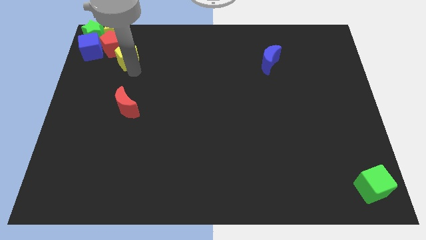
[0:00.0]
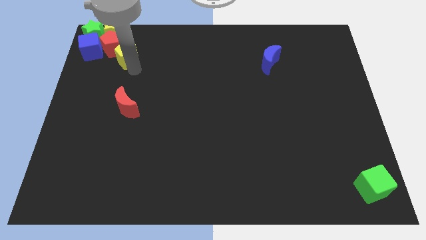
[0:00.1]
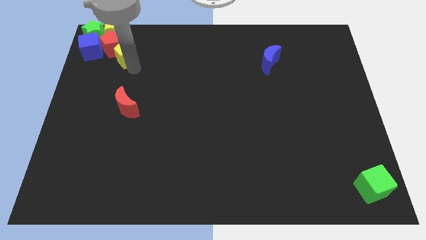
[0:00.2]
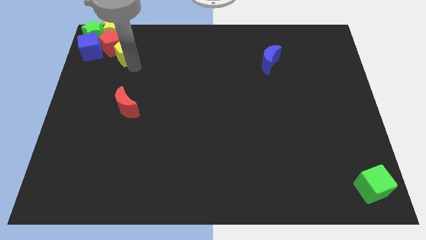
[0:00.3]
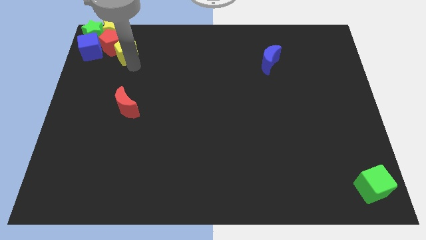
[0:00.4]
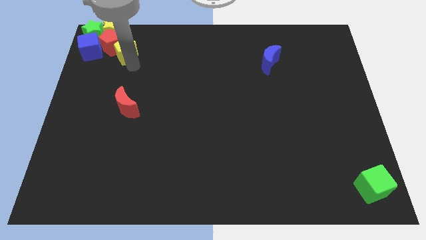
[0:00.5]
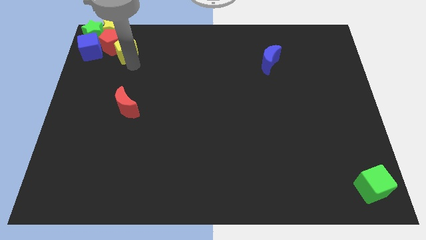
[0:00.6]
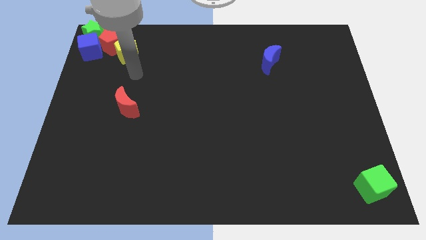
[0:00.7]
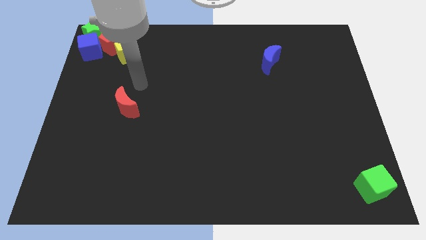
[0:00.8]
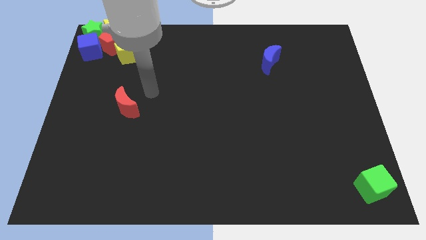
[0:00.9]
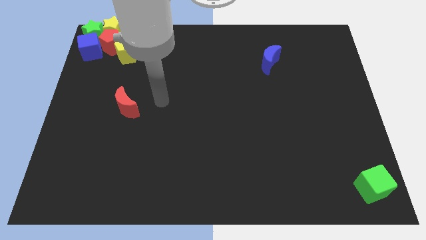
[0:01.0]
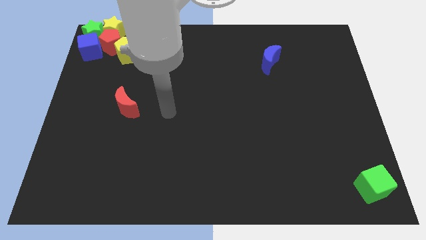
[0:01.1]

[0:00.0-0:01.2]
move the arm away from the yellow pentagon

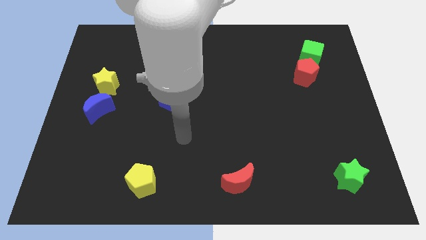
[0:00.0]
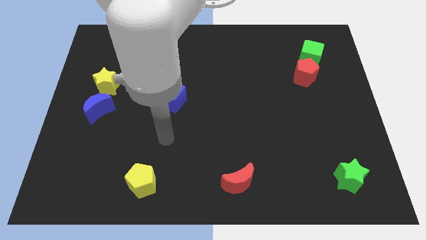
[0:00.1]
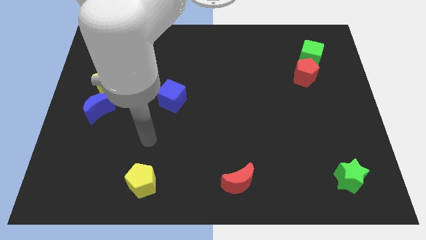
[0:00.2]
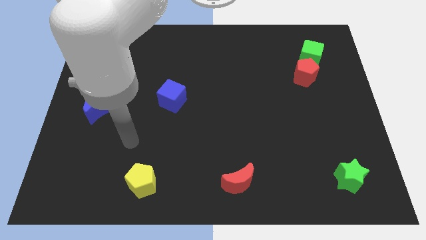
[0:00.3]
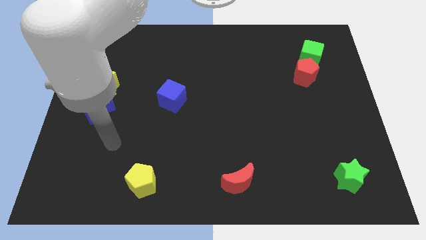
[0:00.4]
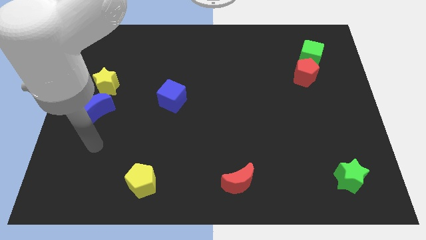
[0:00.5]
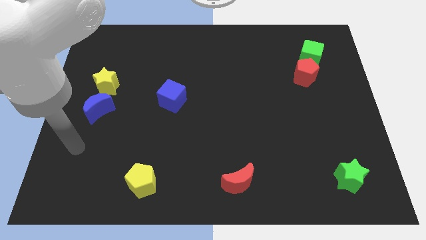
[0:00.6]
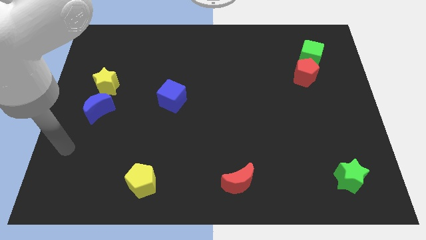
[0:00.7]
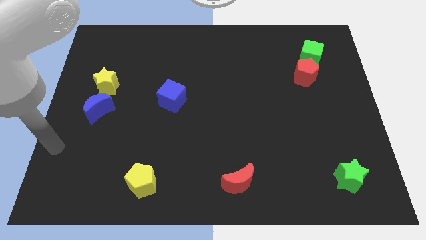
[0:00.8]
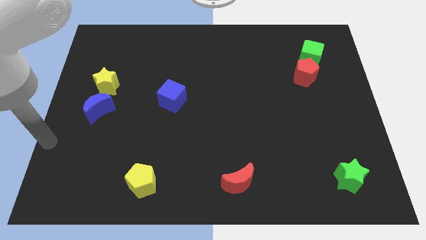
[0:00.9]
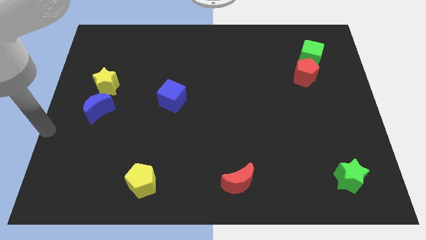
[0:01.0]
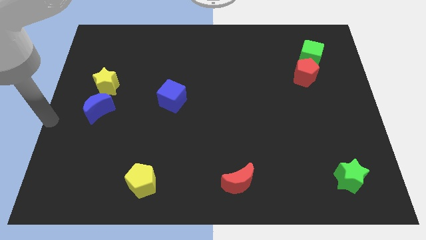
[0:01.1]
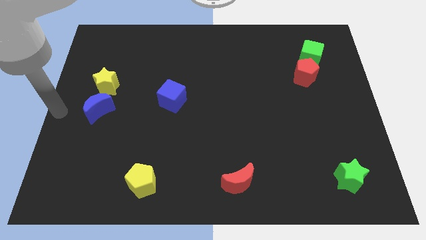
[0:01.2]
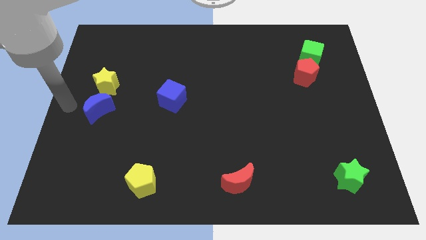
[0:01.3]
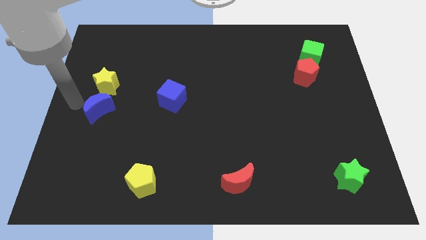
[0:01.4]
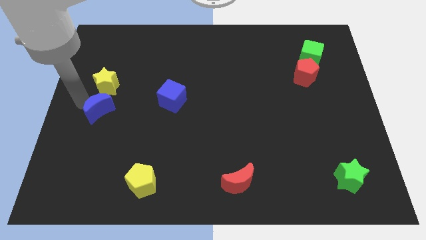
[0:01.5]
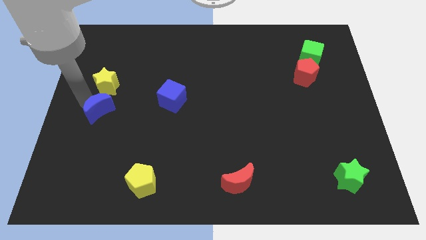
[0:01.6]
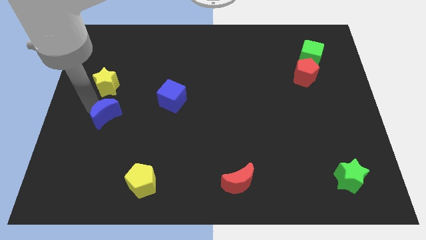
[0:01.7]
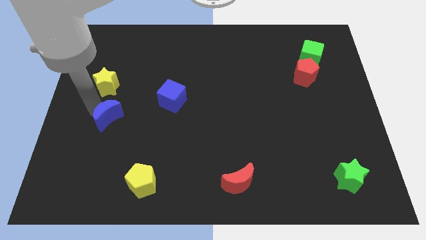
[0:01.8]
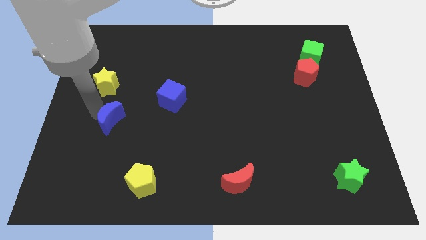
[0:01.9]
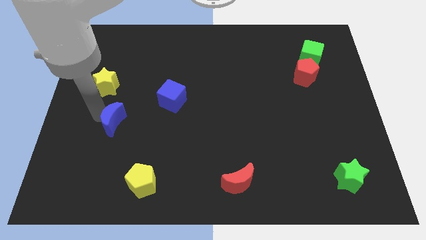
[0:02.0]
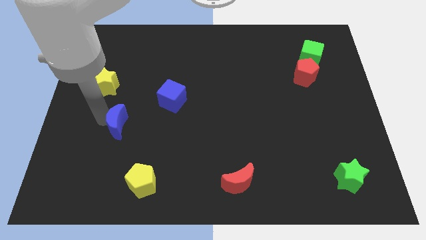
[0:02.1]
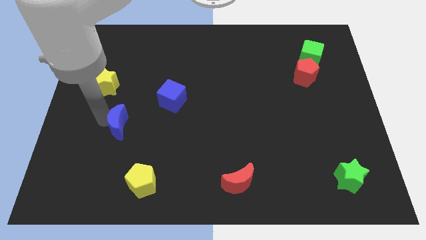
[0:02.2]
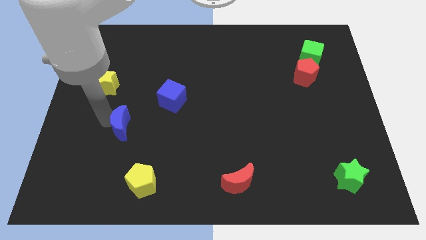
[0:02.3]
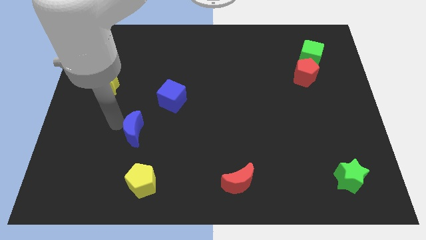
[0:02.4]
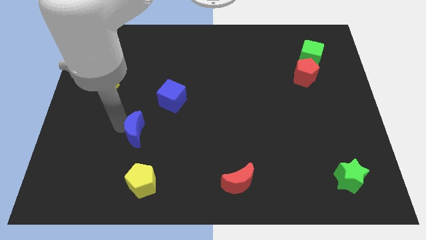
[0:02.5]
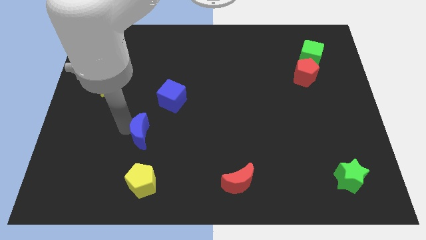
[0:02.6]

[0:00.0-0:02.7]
separate blue moon from yellow star

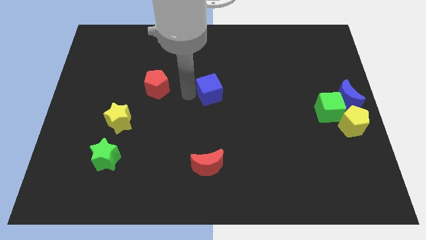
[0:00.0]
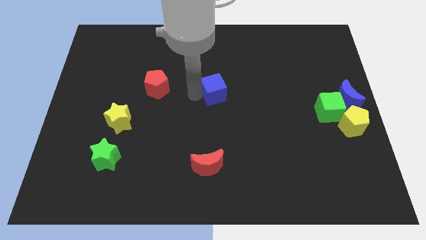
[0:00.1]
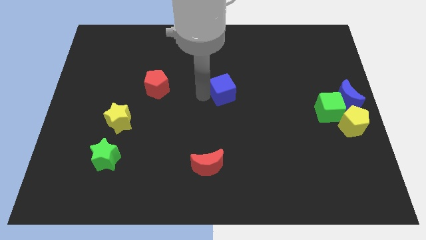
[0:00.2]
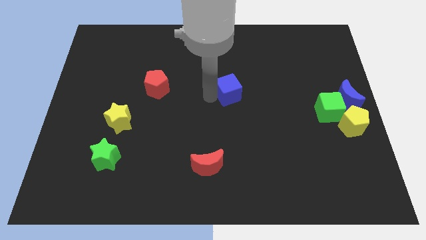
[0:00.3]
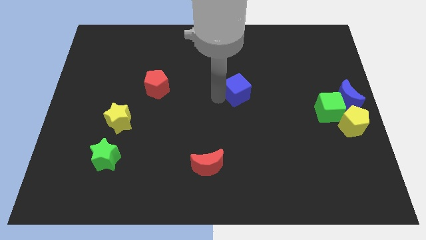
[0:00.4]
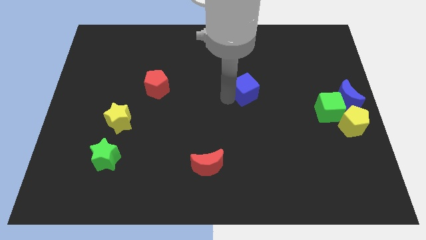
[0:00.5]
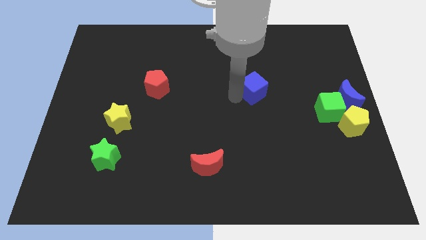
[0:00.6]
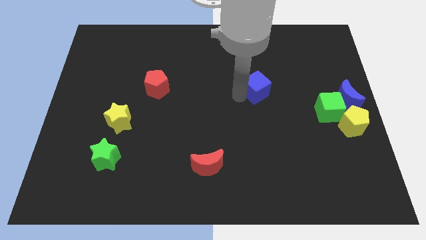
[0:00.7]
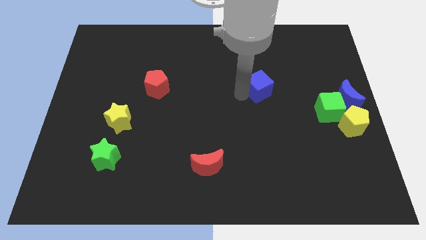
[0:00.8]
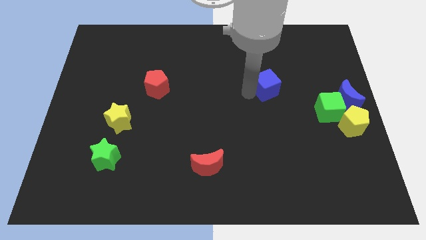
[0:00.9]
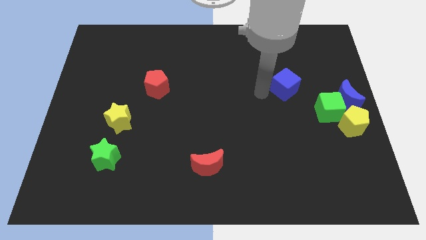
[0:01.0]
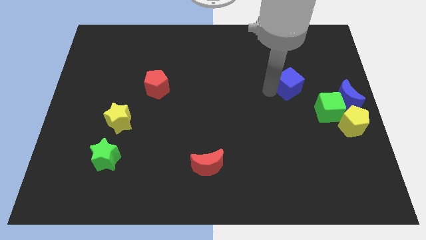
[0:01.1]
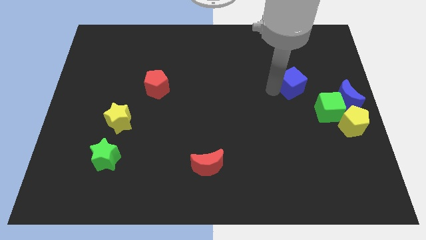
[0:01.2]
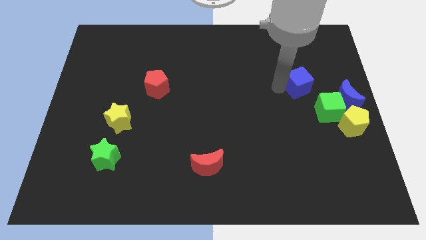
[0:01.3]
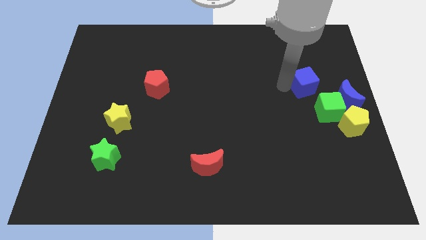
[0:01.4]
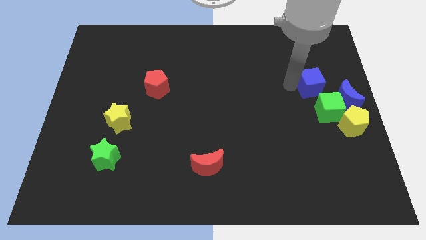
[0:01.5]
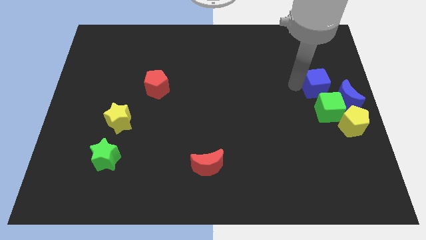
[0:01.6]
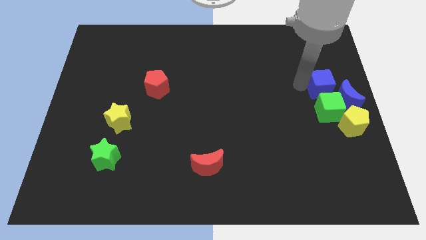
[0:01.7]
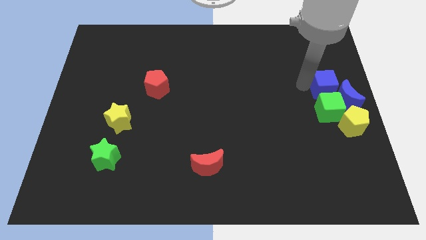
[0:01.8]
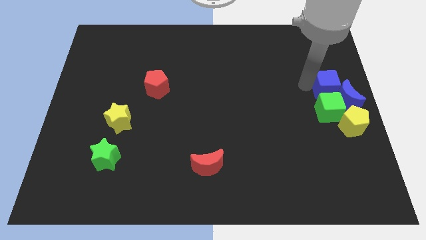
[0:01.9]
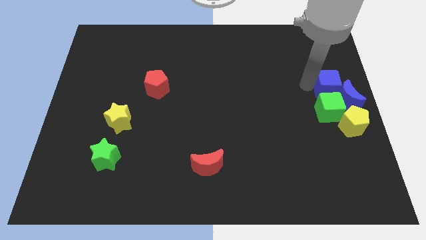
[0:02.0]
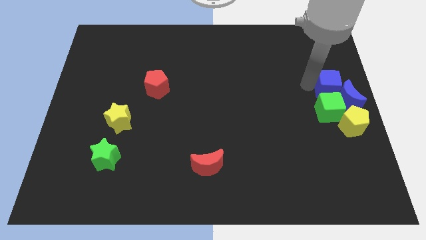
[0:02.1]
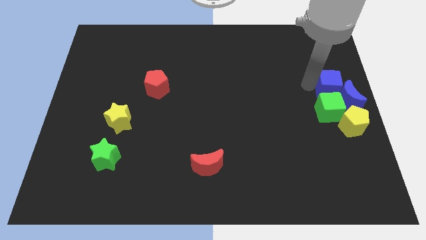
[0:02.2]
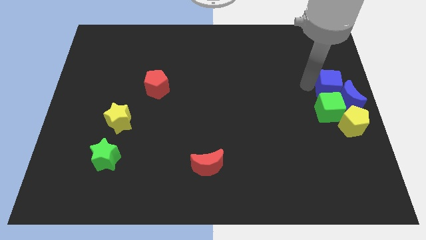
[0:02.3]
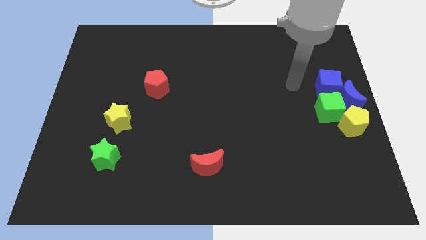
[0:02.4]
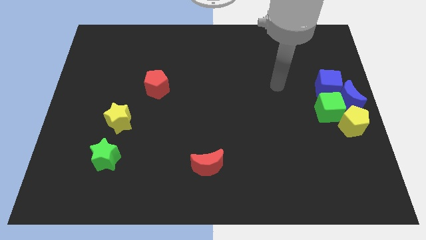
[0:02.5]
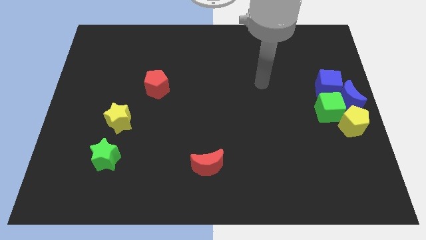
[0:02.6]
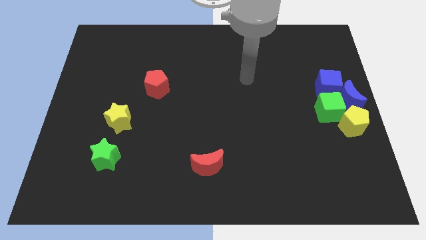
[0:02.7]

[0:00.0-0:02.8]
place the blue cube above the green cube

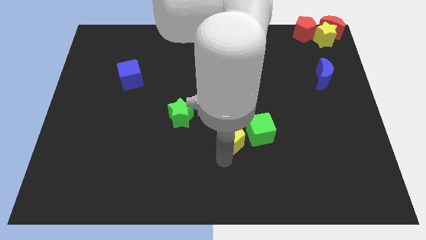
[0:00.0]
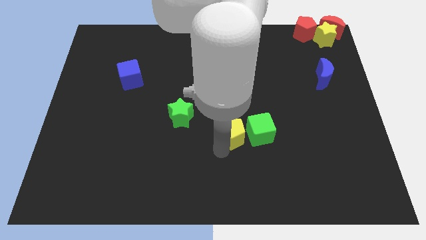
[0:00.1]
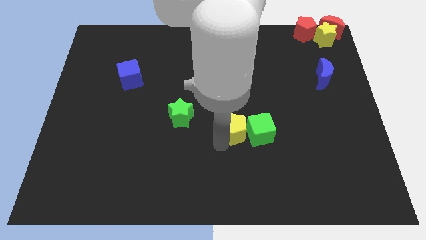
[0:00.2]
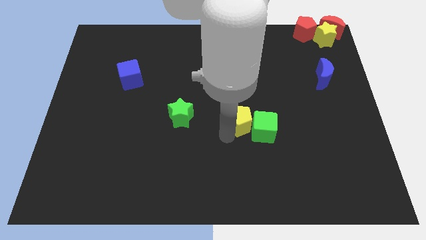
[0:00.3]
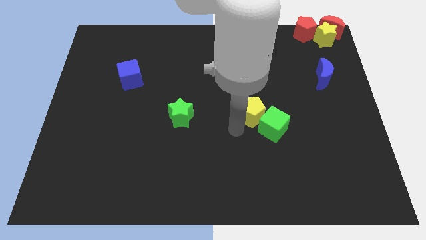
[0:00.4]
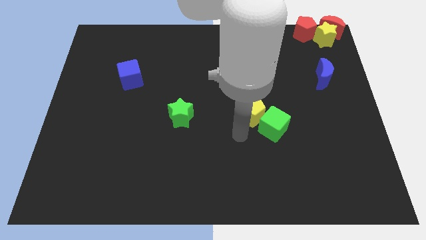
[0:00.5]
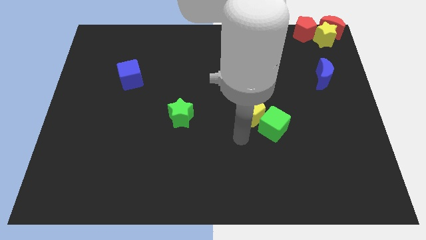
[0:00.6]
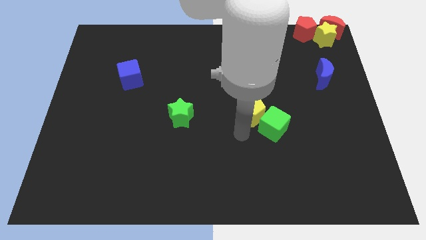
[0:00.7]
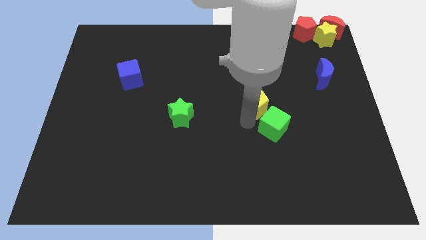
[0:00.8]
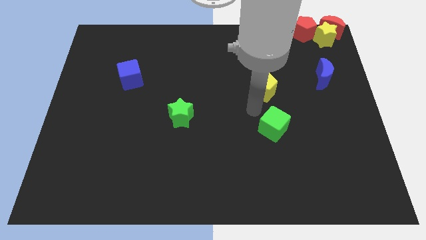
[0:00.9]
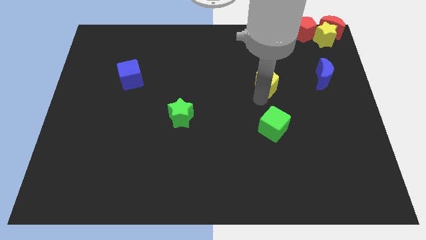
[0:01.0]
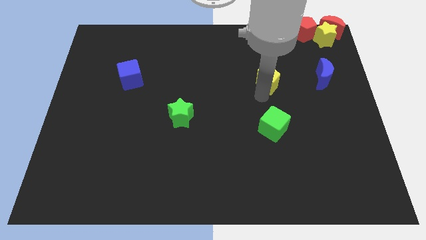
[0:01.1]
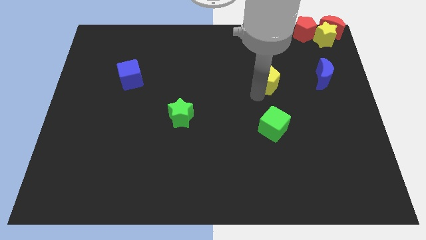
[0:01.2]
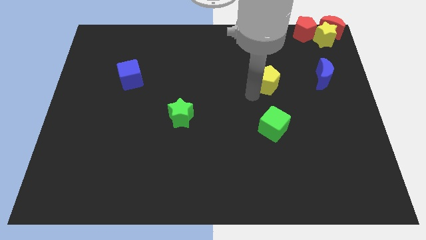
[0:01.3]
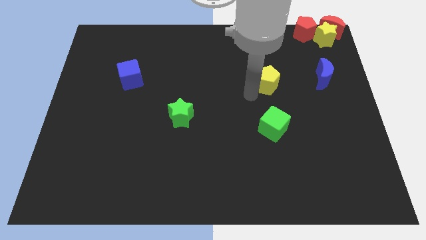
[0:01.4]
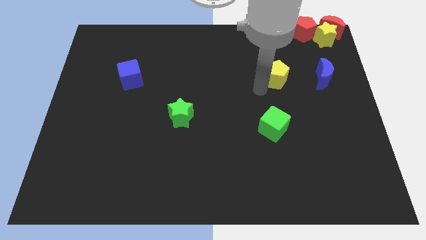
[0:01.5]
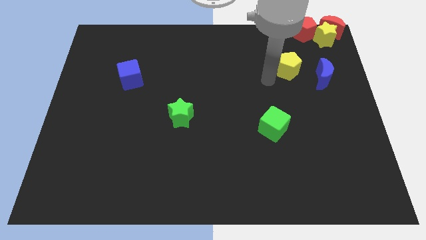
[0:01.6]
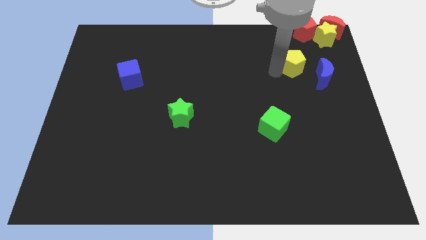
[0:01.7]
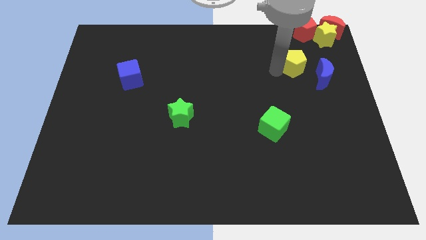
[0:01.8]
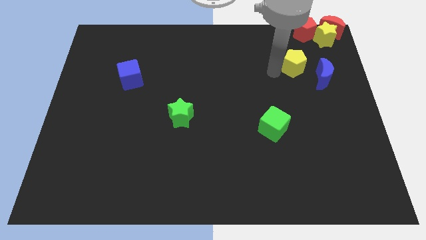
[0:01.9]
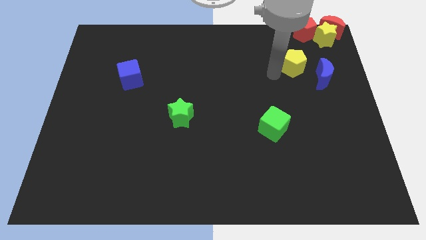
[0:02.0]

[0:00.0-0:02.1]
separate yellow pentagon from green cube

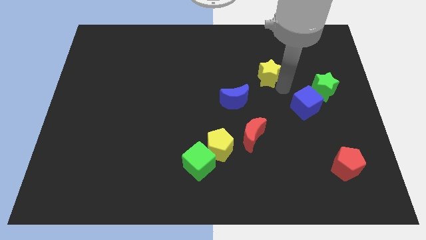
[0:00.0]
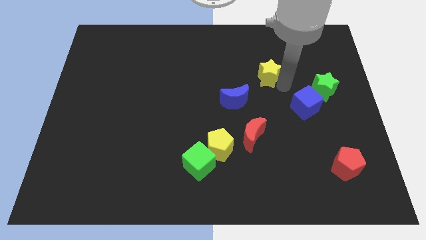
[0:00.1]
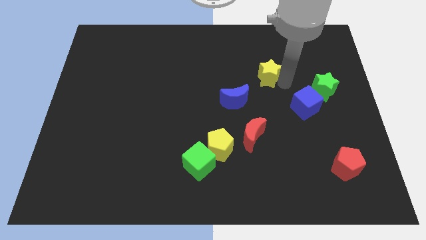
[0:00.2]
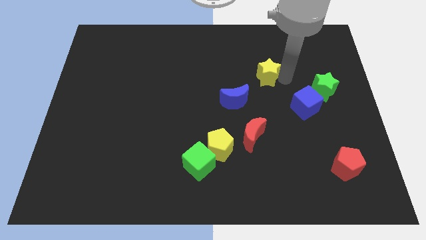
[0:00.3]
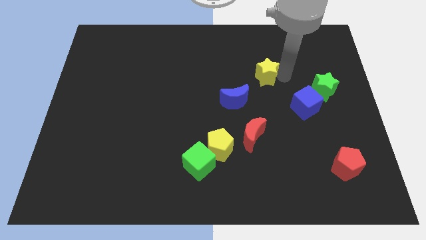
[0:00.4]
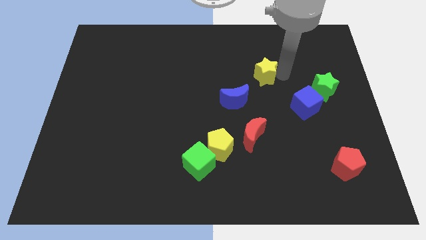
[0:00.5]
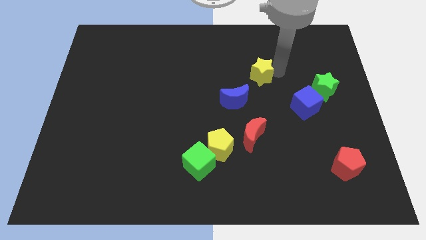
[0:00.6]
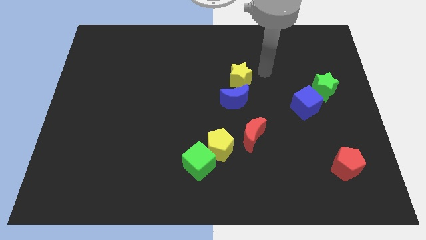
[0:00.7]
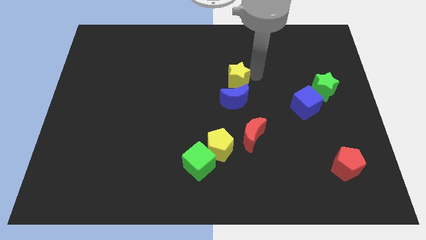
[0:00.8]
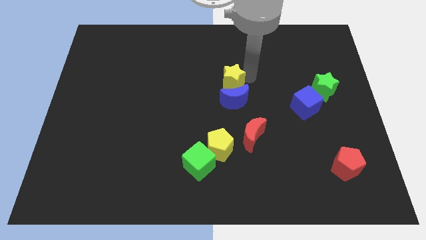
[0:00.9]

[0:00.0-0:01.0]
move the yellow star to the top of the blue moon
